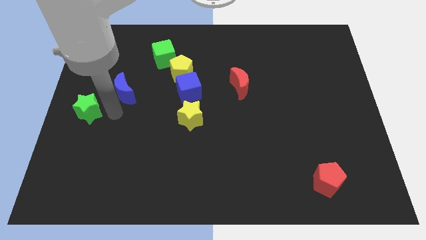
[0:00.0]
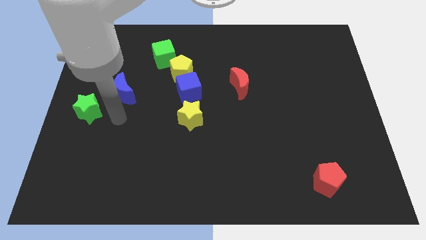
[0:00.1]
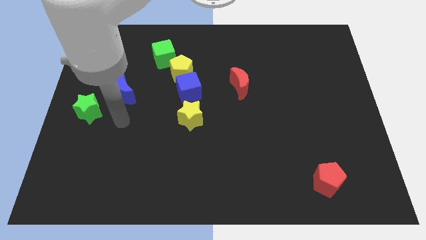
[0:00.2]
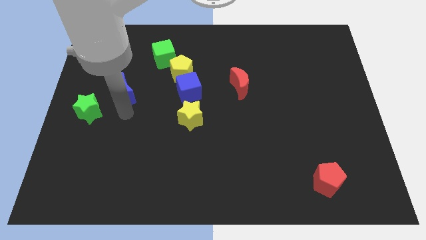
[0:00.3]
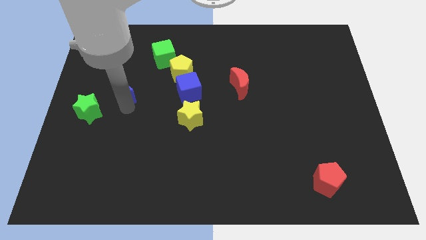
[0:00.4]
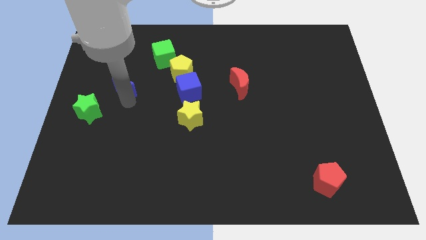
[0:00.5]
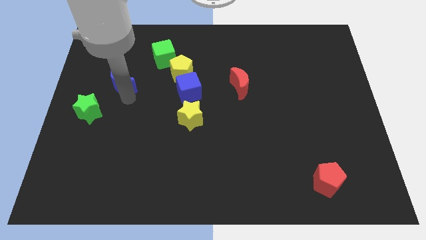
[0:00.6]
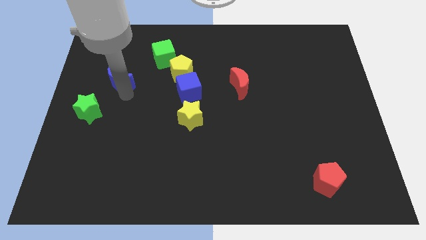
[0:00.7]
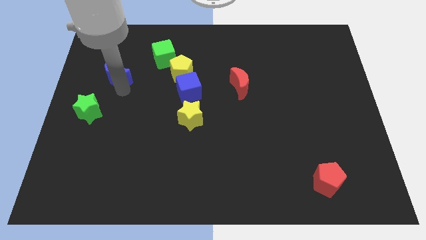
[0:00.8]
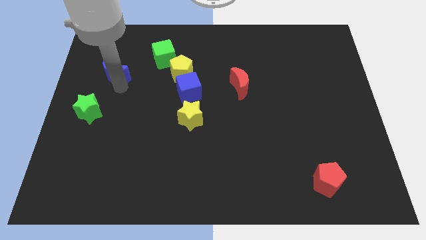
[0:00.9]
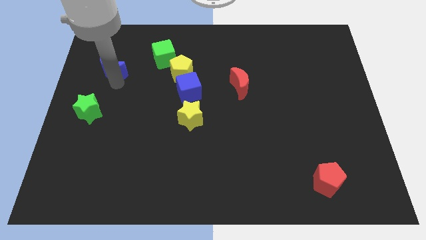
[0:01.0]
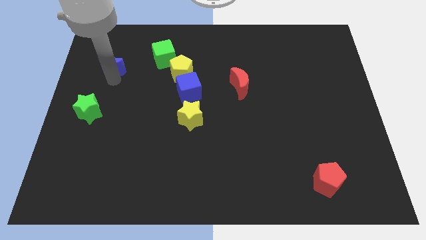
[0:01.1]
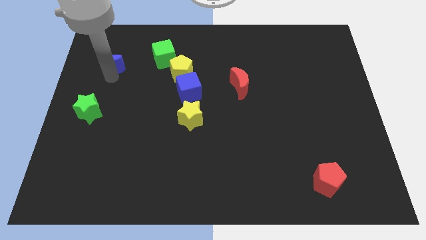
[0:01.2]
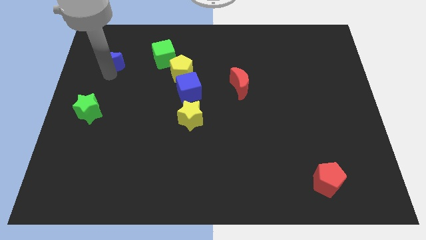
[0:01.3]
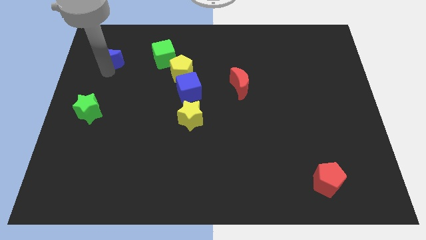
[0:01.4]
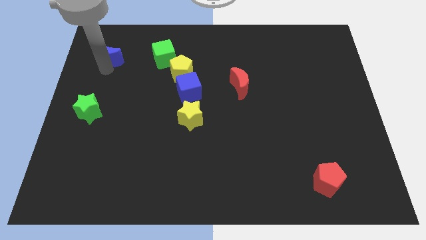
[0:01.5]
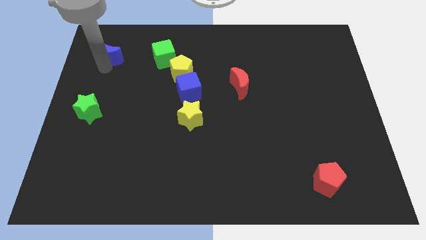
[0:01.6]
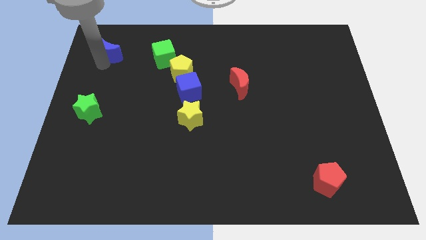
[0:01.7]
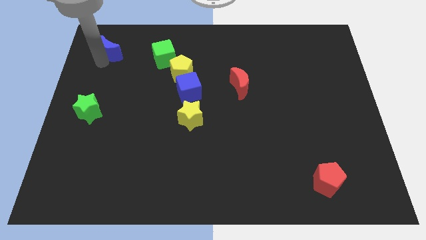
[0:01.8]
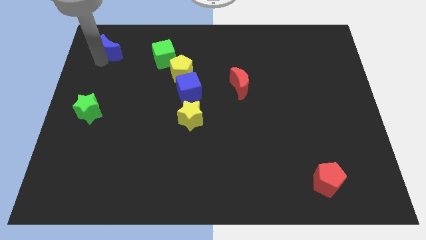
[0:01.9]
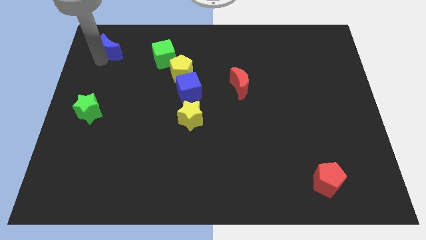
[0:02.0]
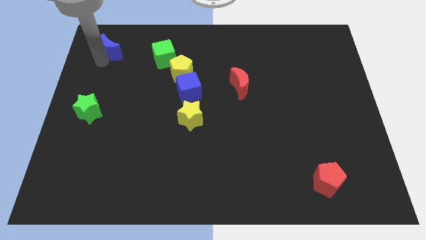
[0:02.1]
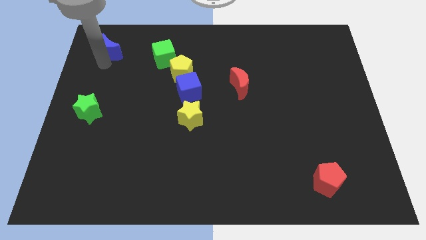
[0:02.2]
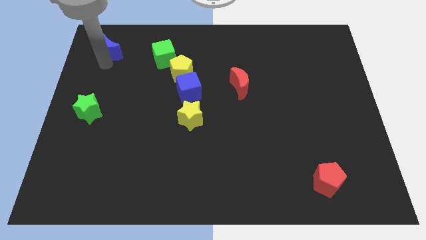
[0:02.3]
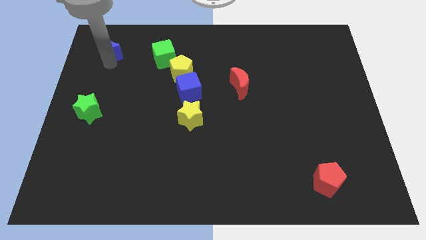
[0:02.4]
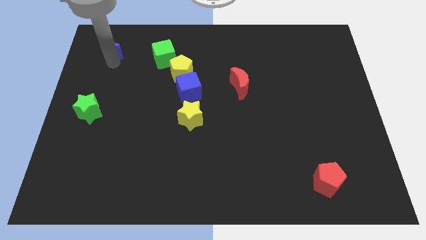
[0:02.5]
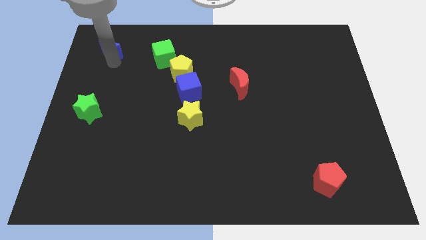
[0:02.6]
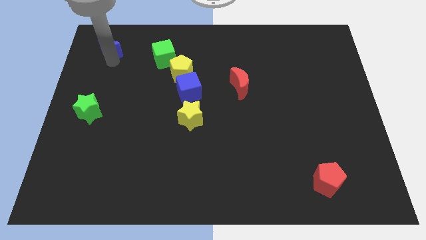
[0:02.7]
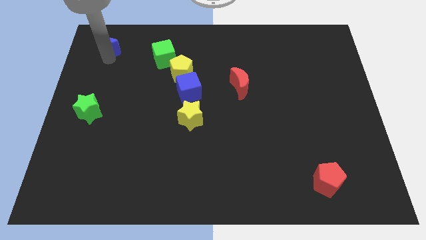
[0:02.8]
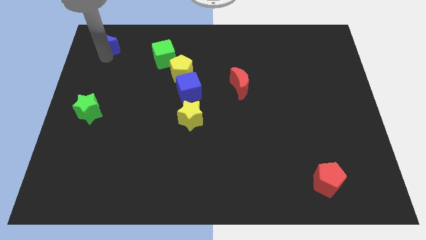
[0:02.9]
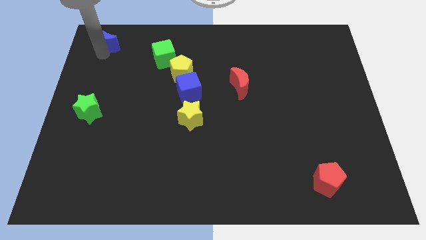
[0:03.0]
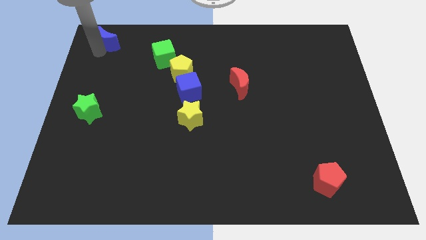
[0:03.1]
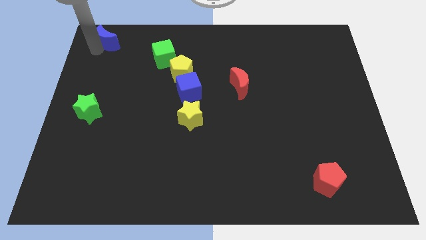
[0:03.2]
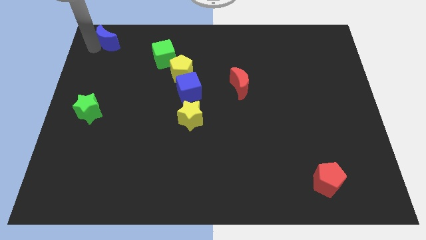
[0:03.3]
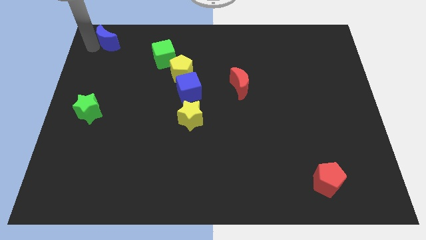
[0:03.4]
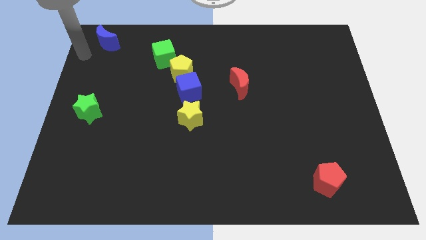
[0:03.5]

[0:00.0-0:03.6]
slide blue crescent at top left corner

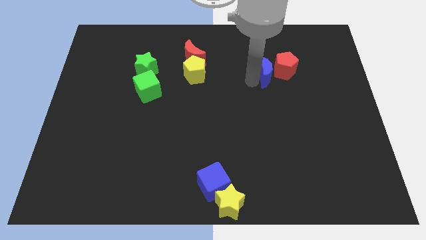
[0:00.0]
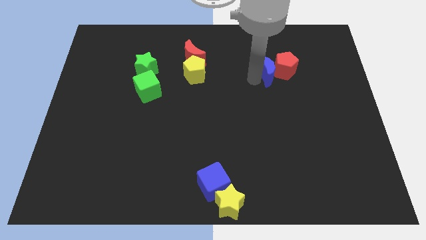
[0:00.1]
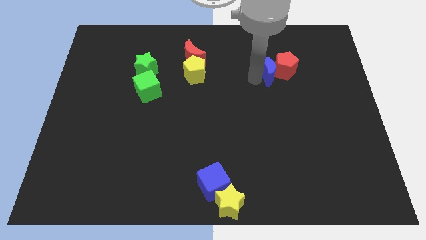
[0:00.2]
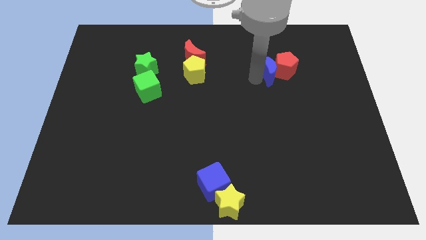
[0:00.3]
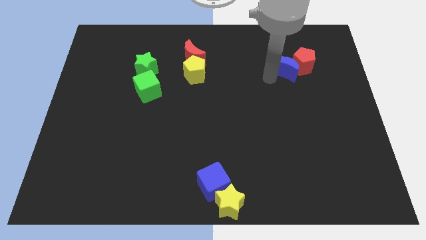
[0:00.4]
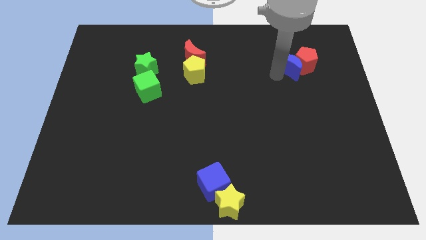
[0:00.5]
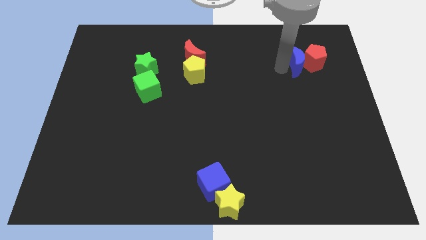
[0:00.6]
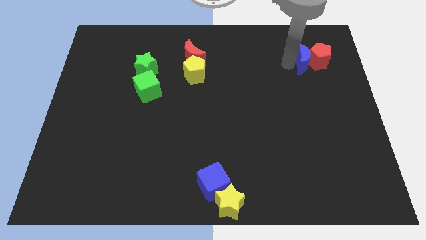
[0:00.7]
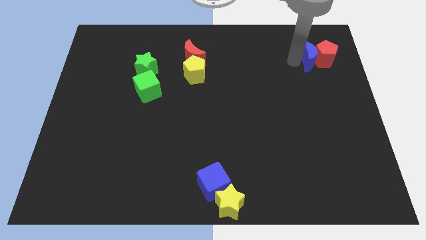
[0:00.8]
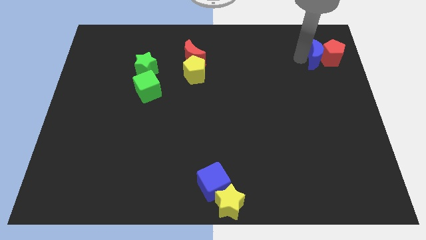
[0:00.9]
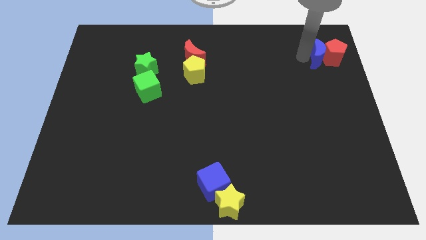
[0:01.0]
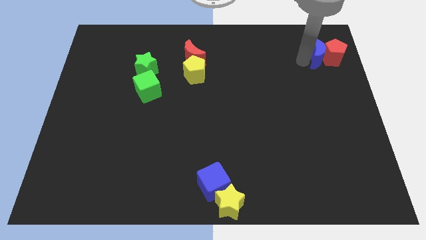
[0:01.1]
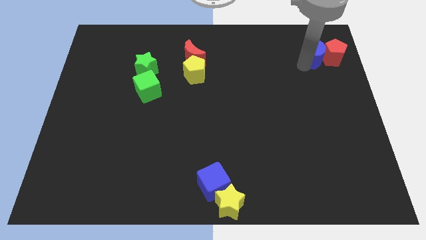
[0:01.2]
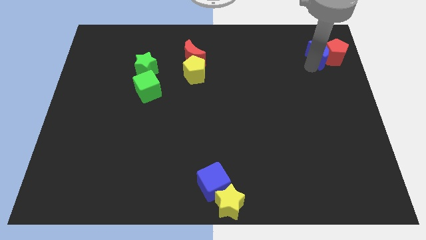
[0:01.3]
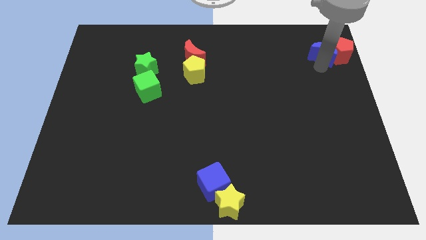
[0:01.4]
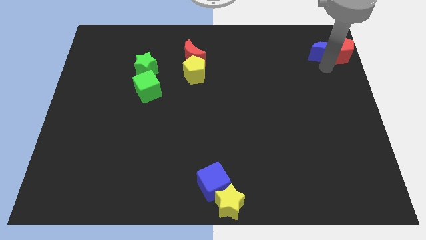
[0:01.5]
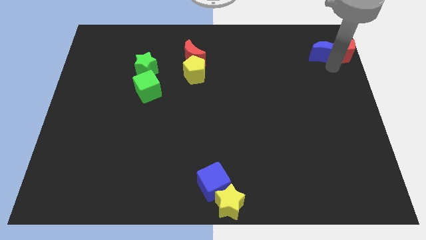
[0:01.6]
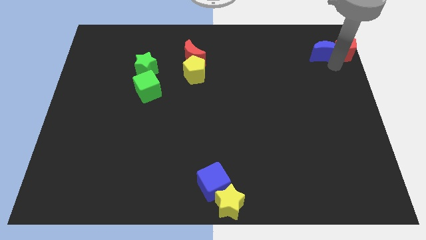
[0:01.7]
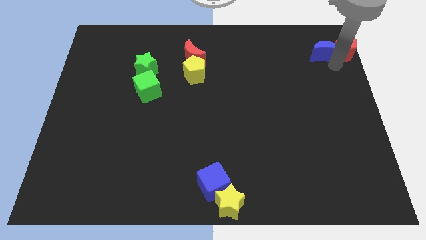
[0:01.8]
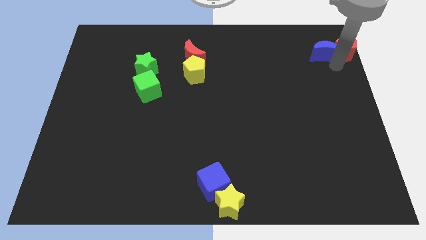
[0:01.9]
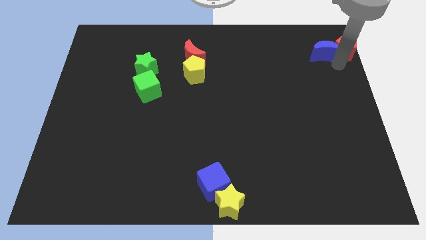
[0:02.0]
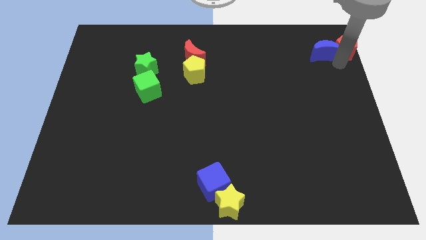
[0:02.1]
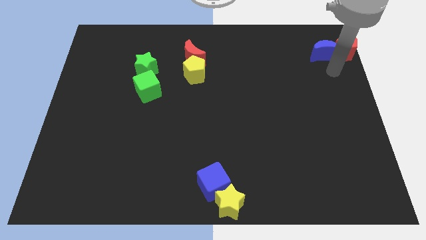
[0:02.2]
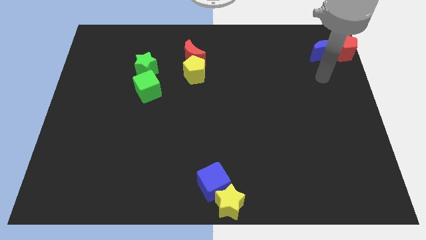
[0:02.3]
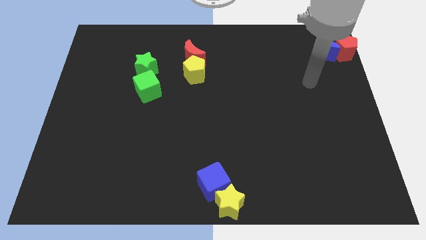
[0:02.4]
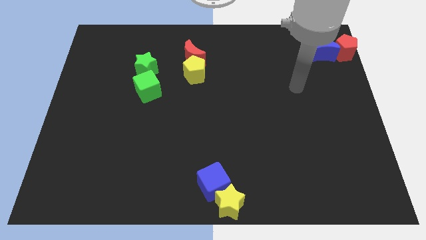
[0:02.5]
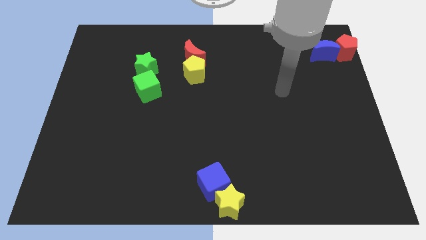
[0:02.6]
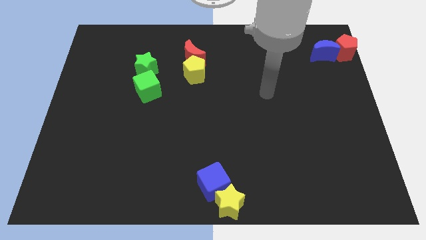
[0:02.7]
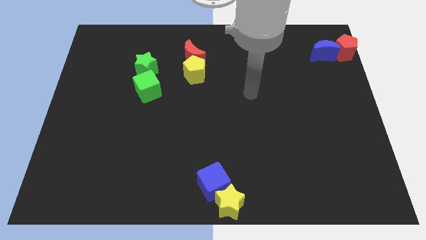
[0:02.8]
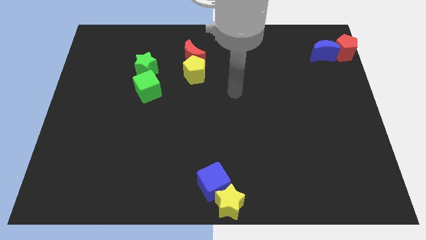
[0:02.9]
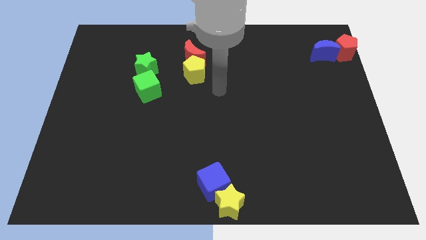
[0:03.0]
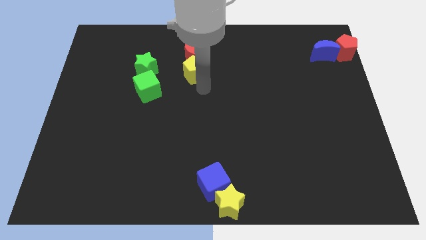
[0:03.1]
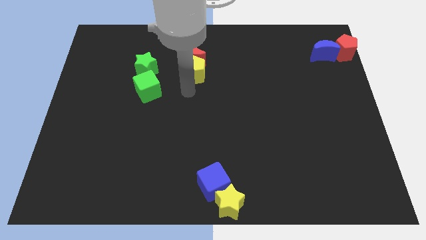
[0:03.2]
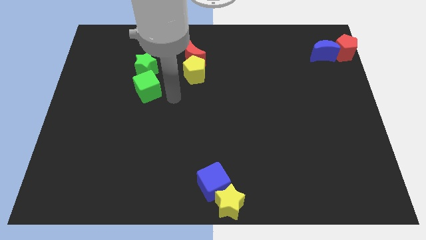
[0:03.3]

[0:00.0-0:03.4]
put the blue moon and the red pentagon at the top right corner

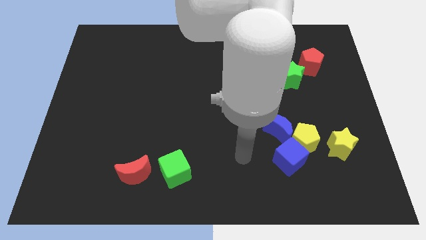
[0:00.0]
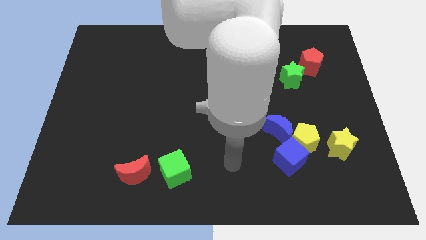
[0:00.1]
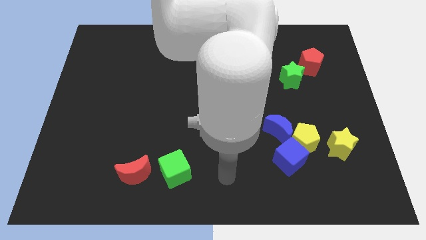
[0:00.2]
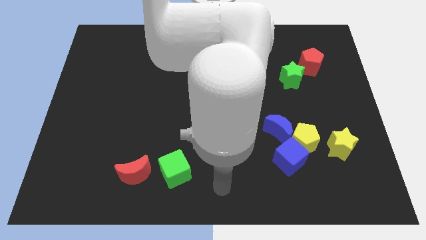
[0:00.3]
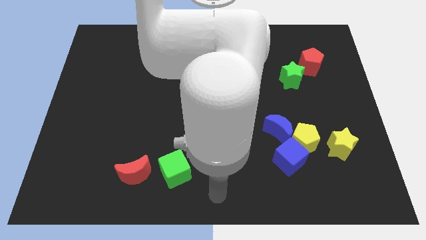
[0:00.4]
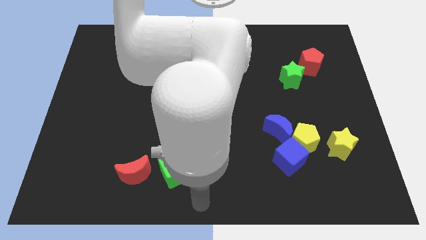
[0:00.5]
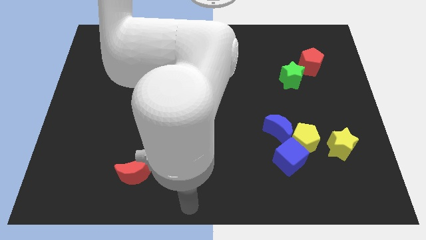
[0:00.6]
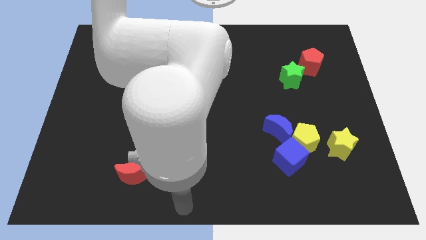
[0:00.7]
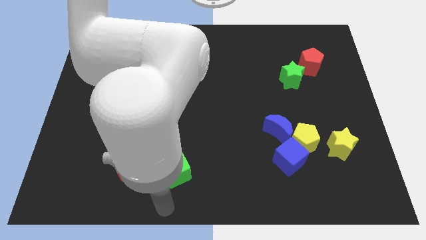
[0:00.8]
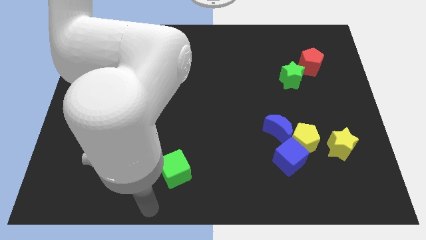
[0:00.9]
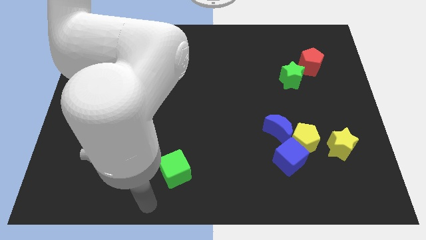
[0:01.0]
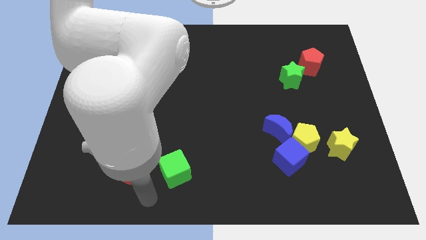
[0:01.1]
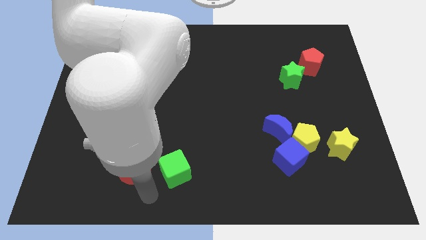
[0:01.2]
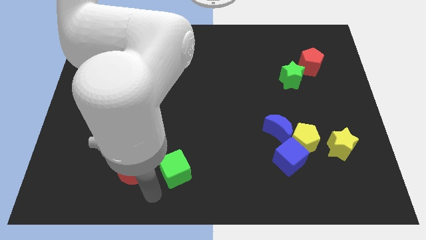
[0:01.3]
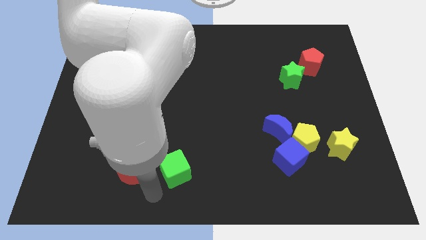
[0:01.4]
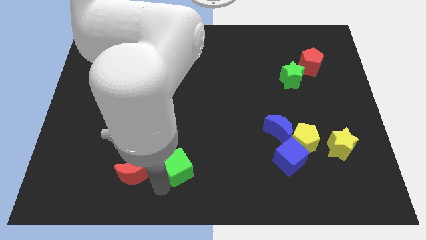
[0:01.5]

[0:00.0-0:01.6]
touch the bottom left side of the green cube

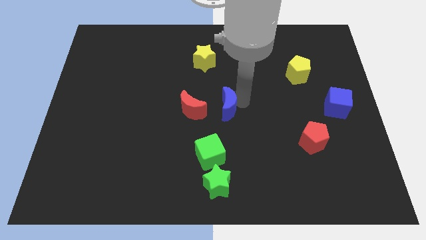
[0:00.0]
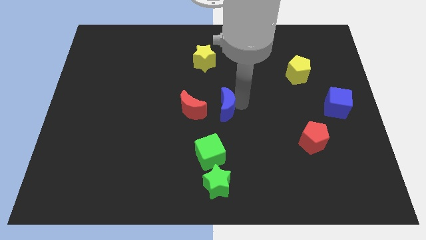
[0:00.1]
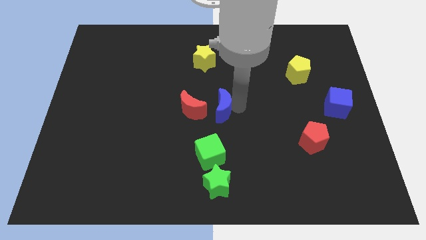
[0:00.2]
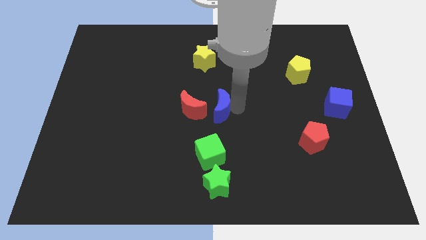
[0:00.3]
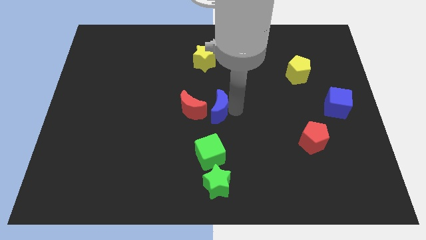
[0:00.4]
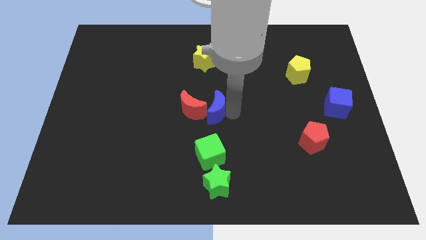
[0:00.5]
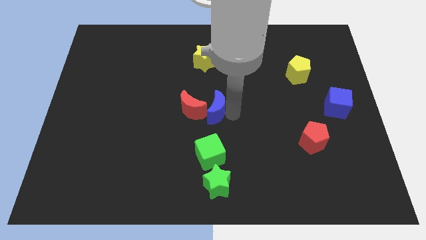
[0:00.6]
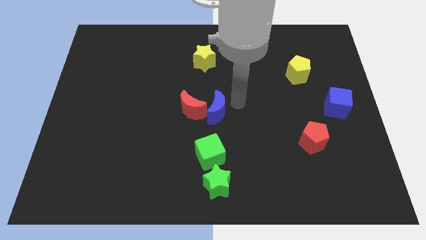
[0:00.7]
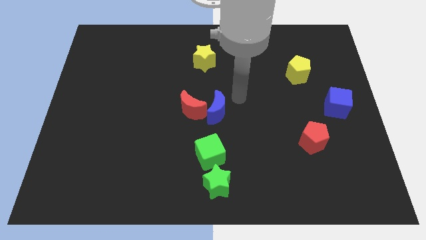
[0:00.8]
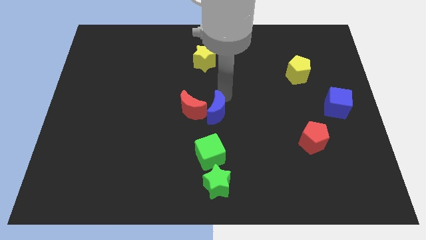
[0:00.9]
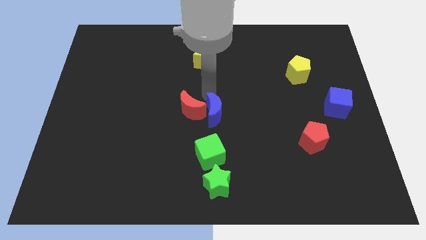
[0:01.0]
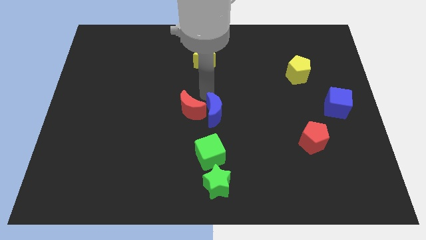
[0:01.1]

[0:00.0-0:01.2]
push the blue crescent into the red crescent
